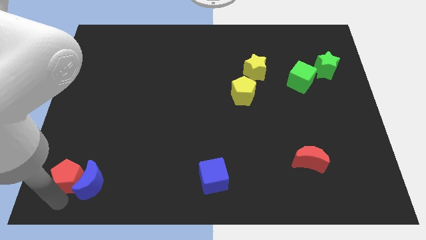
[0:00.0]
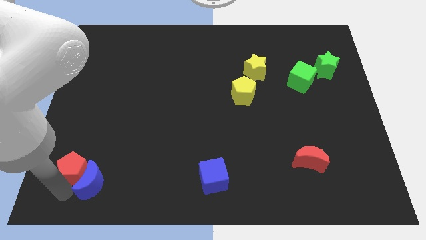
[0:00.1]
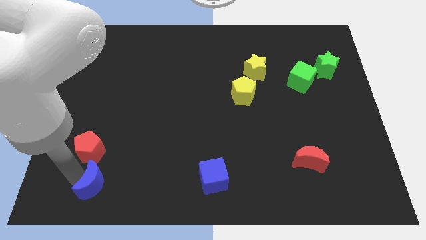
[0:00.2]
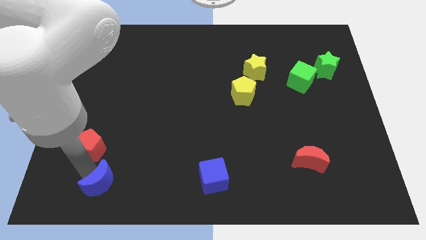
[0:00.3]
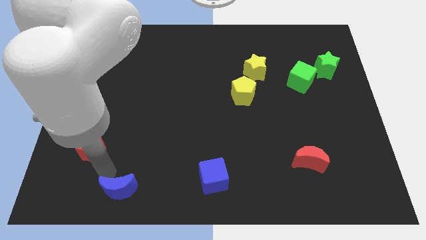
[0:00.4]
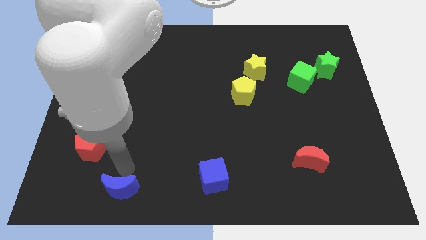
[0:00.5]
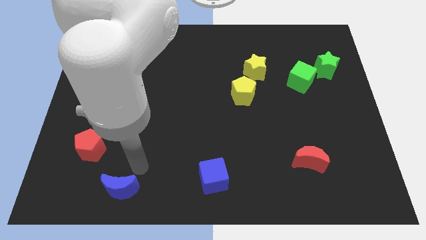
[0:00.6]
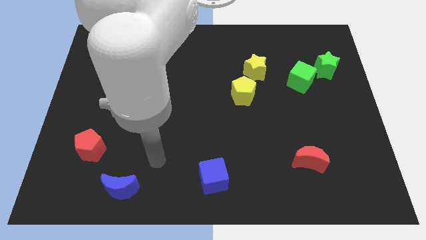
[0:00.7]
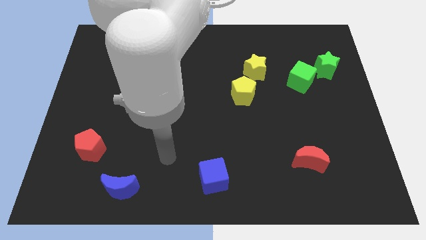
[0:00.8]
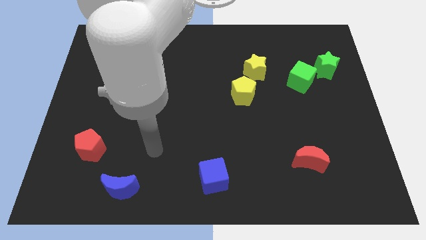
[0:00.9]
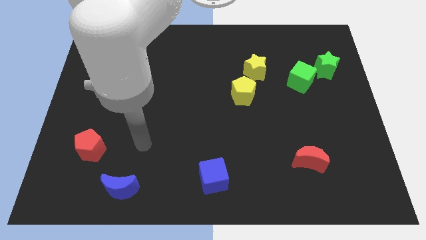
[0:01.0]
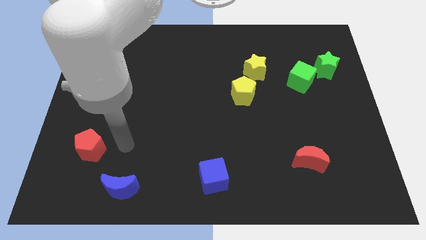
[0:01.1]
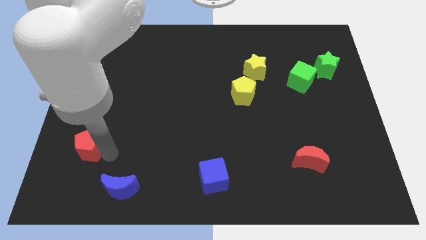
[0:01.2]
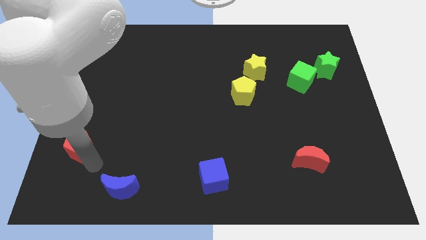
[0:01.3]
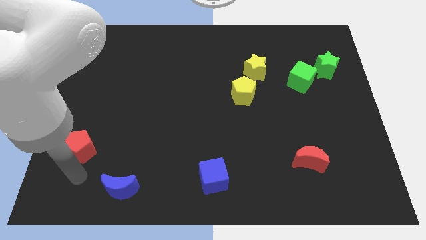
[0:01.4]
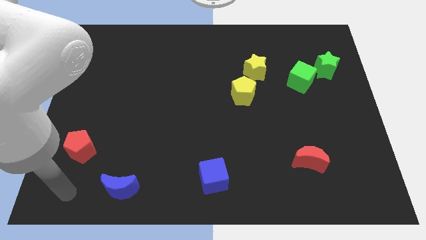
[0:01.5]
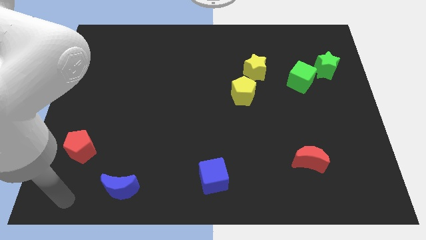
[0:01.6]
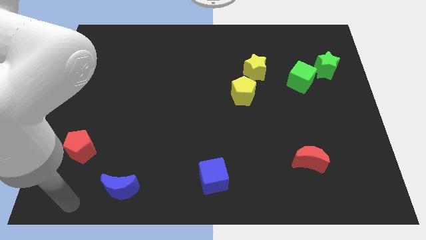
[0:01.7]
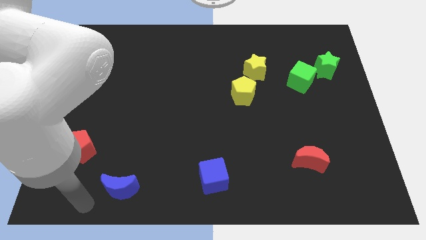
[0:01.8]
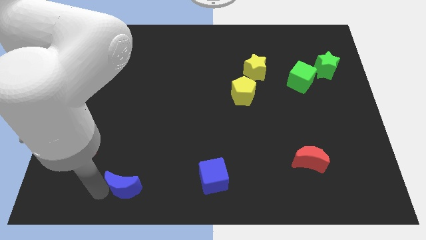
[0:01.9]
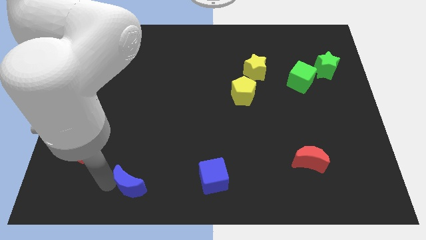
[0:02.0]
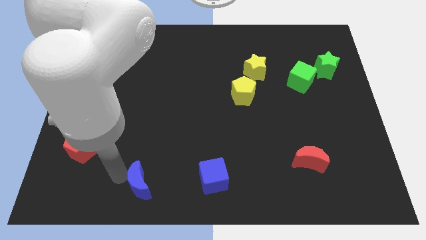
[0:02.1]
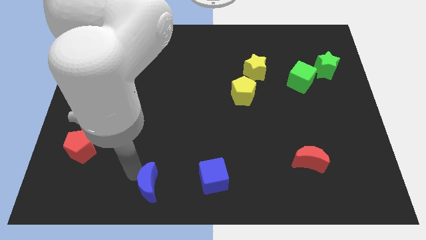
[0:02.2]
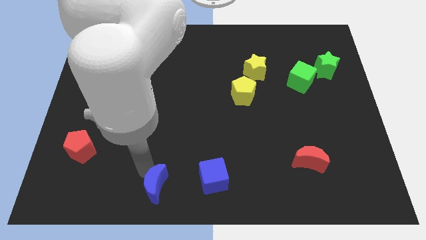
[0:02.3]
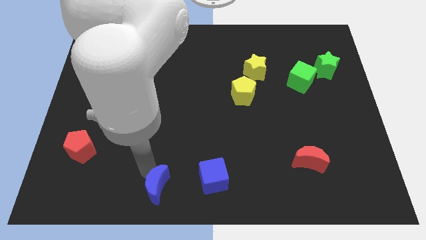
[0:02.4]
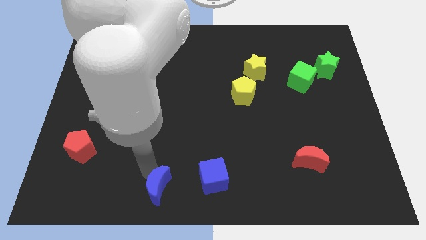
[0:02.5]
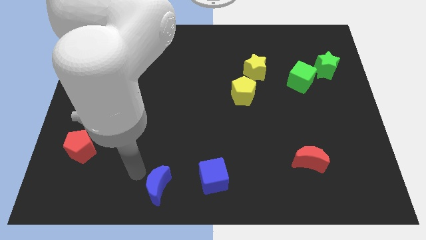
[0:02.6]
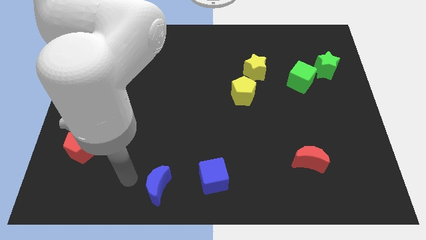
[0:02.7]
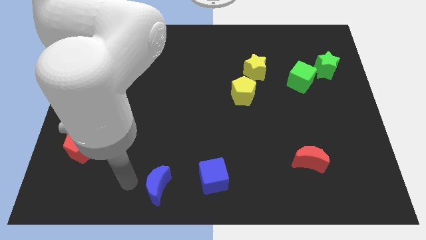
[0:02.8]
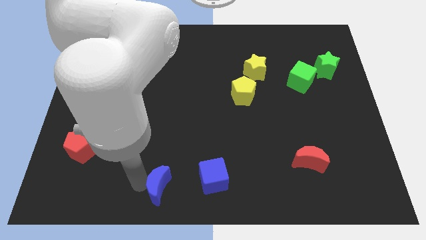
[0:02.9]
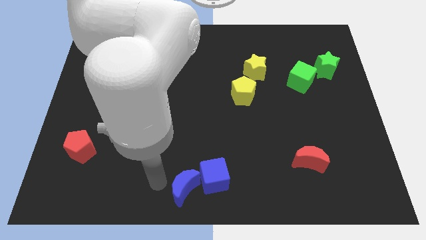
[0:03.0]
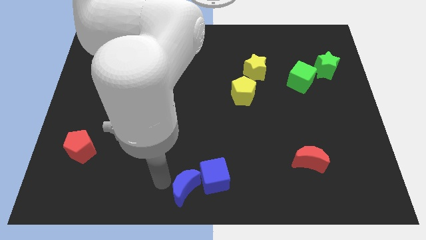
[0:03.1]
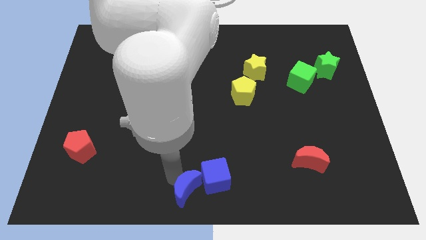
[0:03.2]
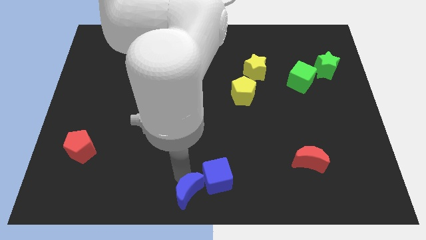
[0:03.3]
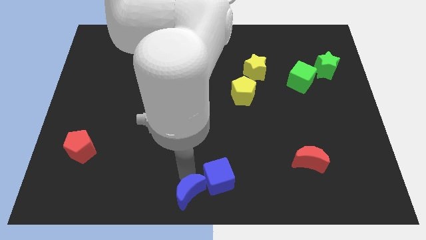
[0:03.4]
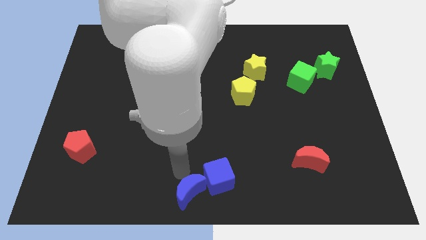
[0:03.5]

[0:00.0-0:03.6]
separate blue moon from red pentagon and bring it close to the blue cube

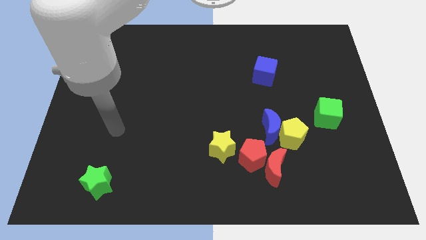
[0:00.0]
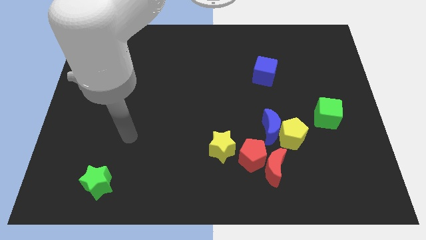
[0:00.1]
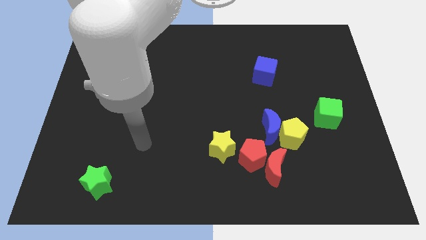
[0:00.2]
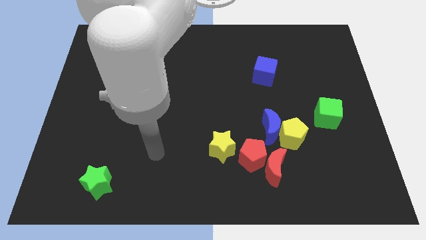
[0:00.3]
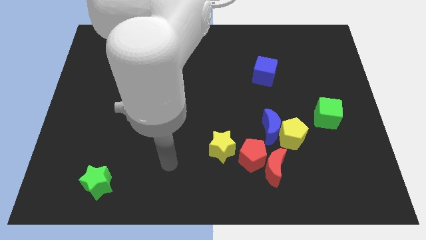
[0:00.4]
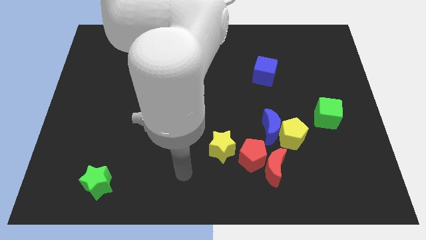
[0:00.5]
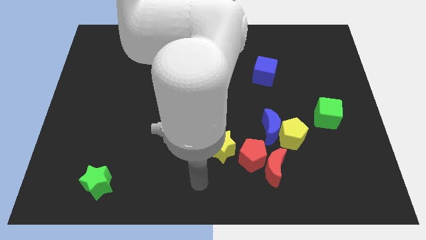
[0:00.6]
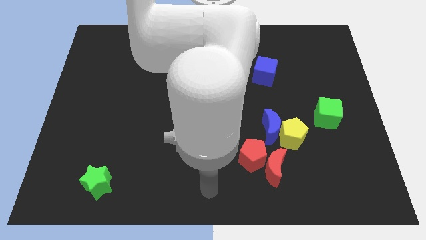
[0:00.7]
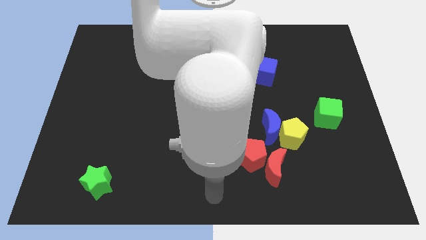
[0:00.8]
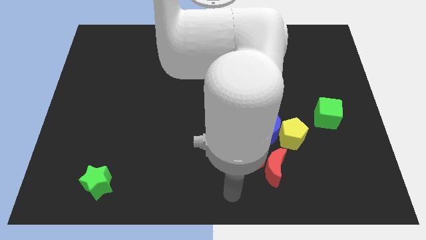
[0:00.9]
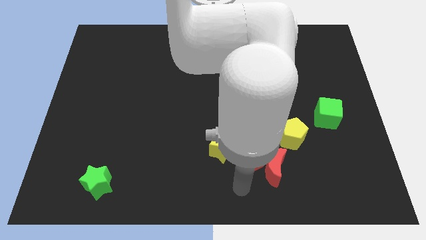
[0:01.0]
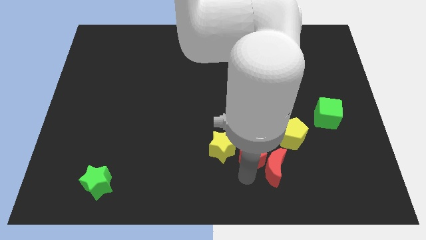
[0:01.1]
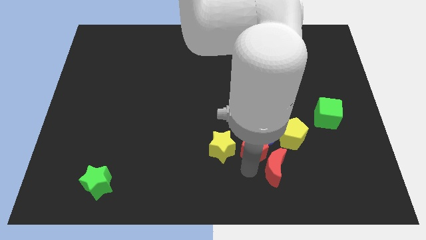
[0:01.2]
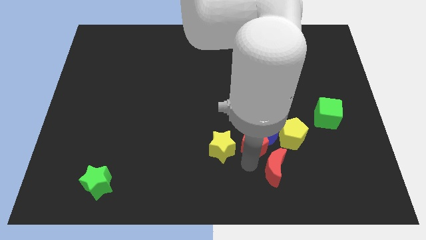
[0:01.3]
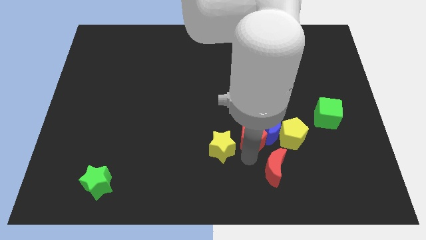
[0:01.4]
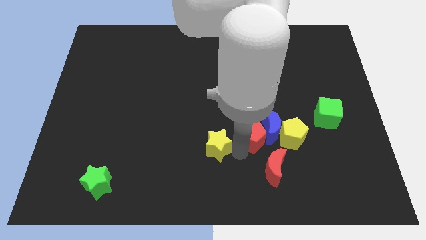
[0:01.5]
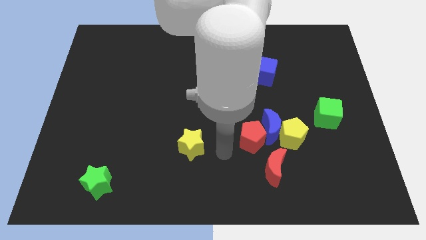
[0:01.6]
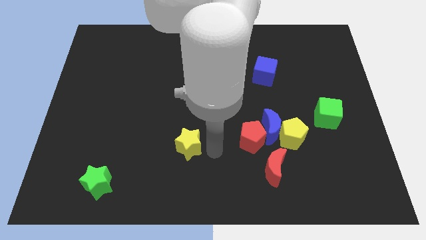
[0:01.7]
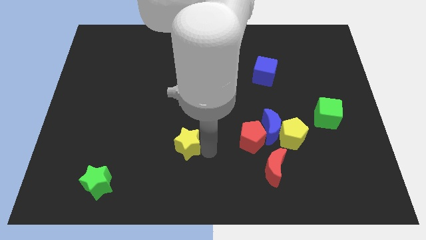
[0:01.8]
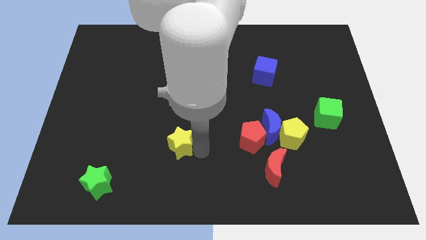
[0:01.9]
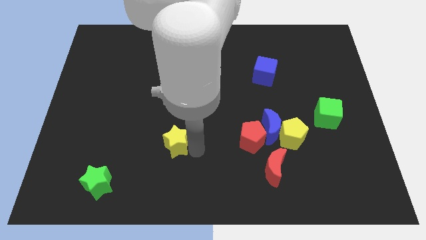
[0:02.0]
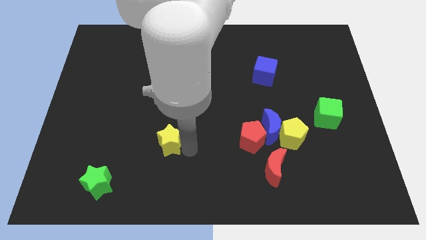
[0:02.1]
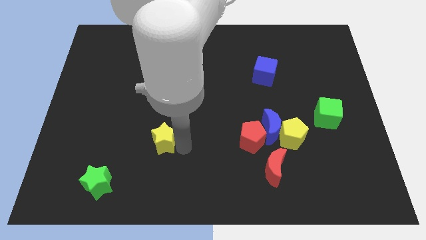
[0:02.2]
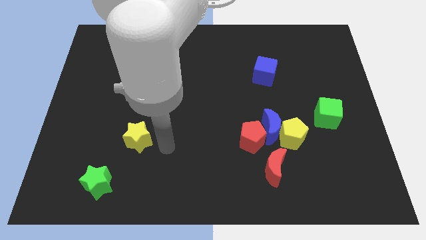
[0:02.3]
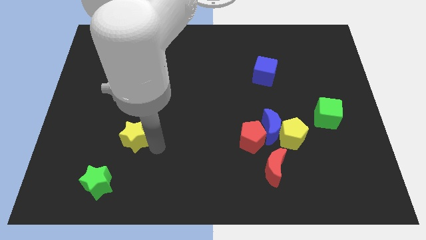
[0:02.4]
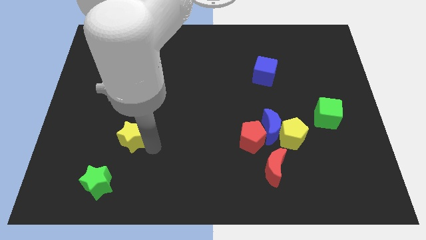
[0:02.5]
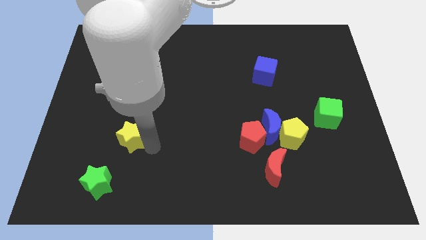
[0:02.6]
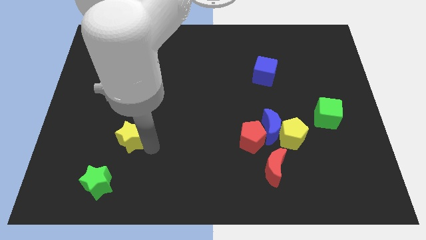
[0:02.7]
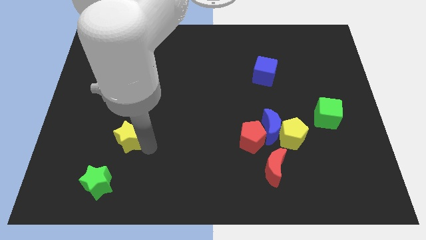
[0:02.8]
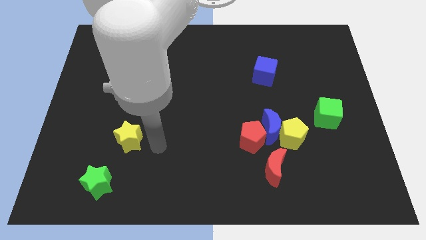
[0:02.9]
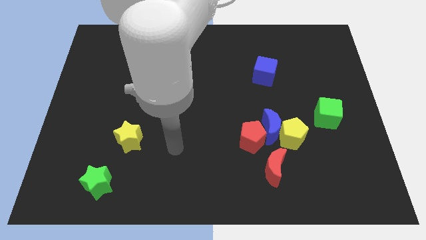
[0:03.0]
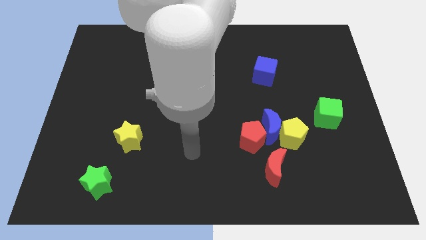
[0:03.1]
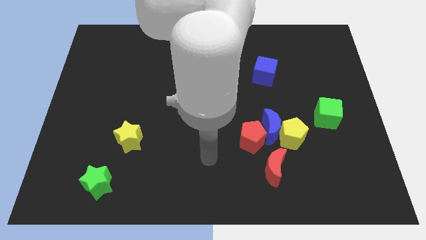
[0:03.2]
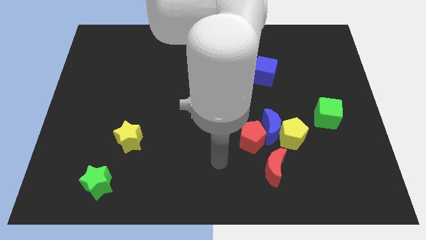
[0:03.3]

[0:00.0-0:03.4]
place the yellow star above the green star

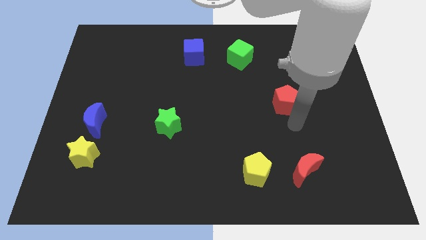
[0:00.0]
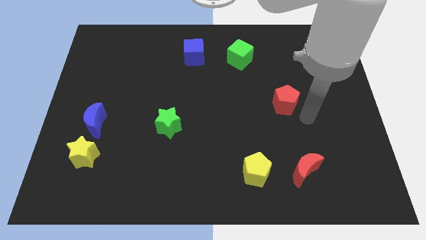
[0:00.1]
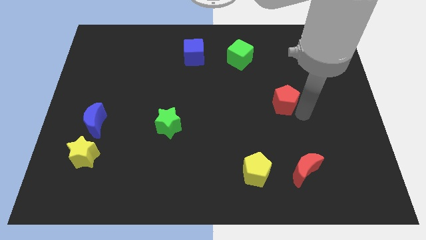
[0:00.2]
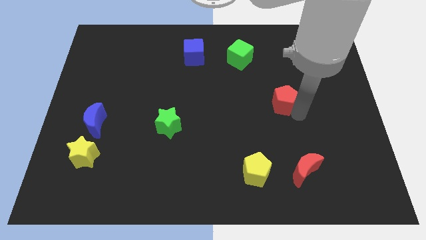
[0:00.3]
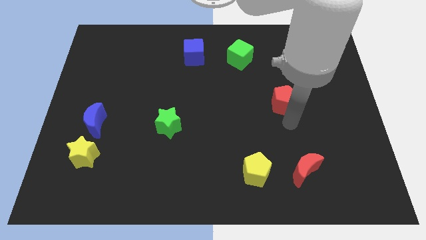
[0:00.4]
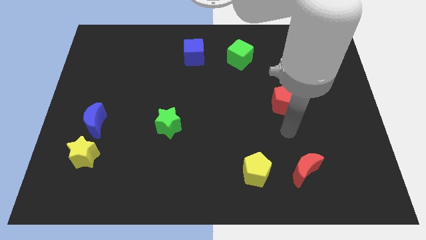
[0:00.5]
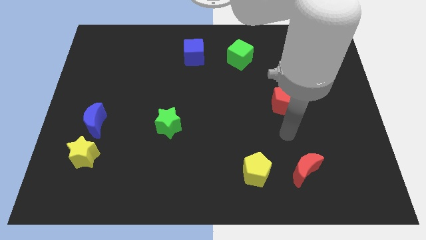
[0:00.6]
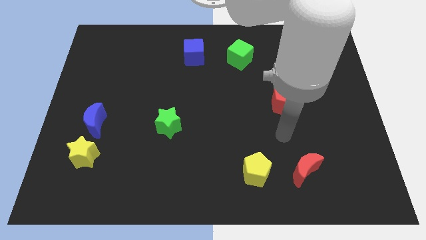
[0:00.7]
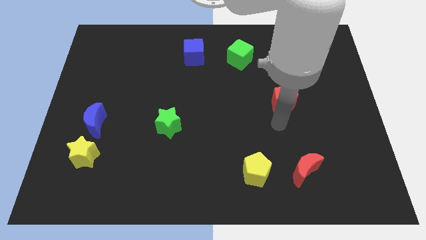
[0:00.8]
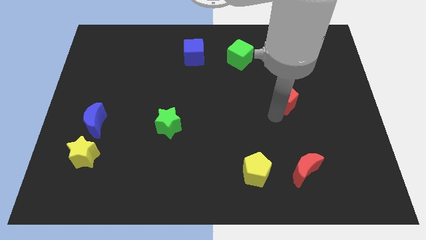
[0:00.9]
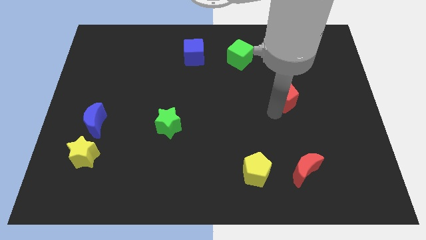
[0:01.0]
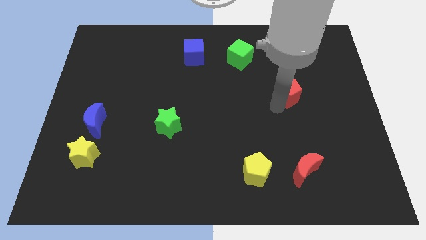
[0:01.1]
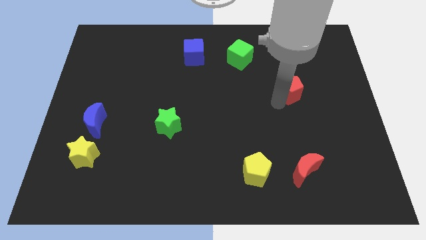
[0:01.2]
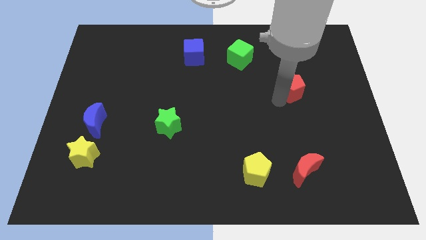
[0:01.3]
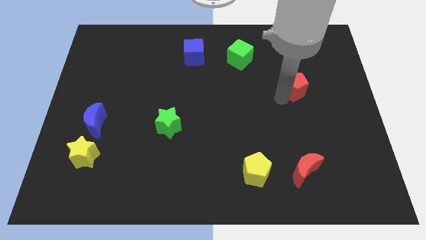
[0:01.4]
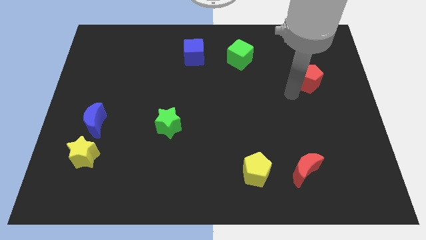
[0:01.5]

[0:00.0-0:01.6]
move the red pentagon vertically at the top of the red moon

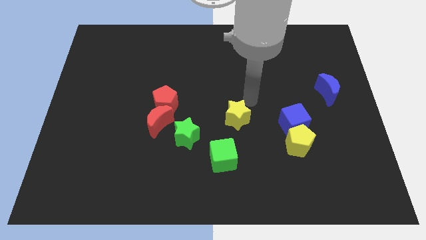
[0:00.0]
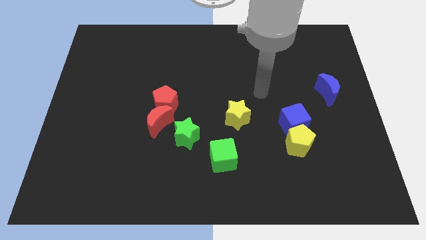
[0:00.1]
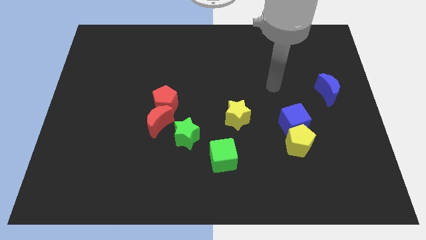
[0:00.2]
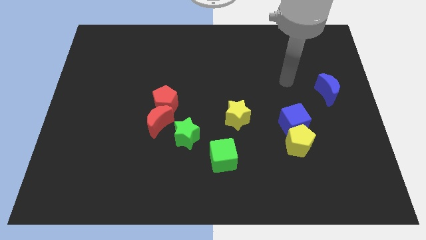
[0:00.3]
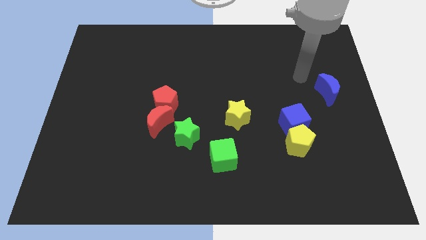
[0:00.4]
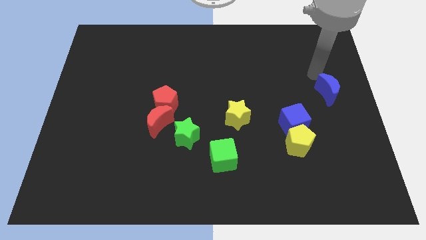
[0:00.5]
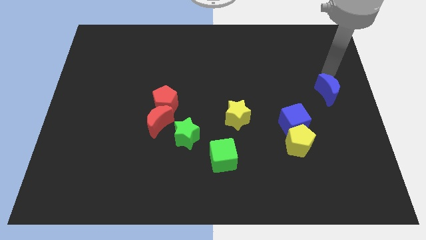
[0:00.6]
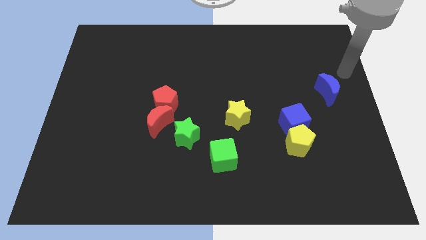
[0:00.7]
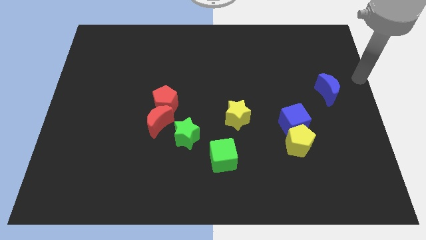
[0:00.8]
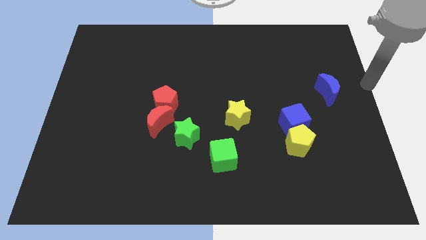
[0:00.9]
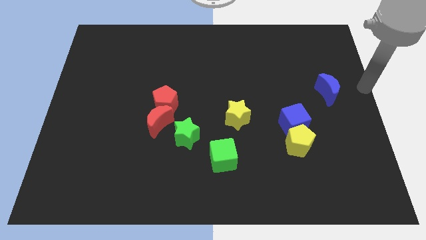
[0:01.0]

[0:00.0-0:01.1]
go away from the yellow star
